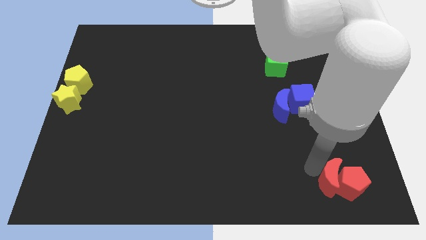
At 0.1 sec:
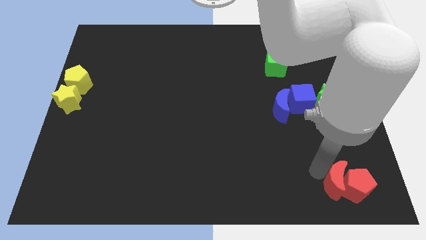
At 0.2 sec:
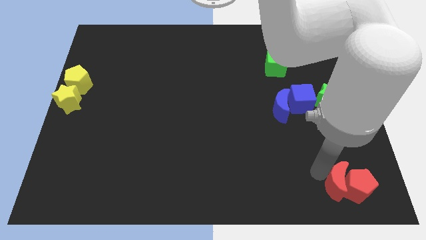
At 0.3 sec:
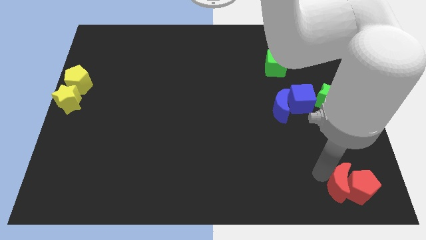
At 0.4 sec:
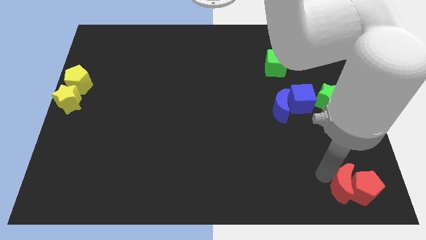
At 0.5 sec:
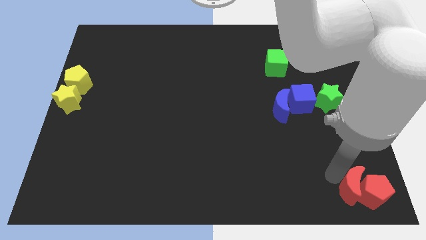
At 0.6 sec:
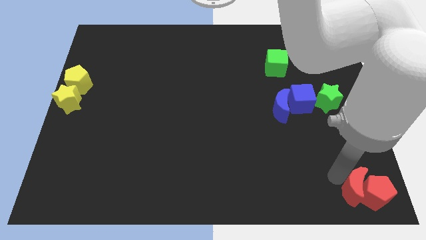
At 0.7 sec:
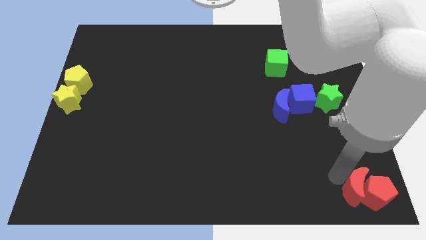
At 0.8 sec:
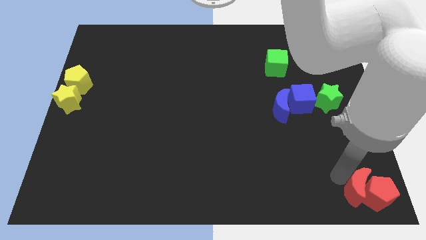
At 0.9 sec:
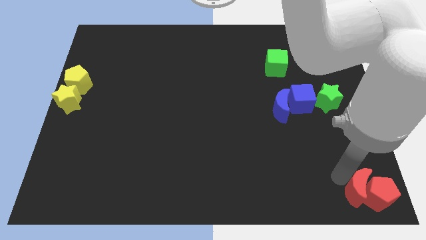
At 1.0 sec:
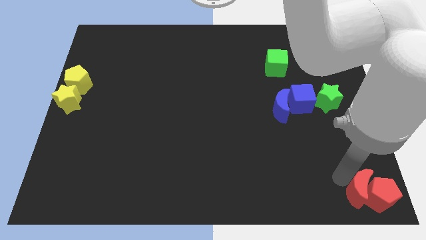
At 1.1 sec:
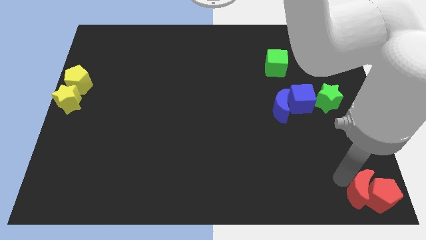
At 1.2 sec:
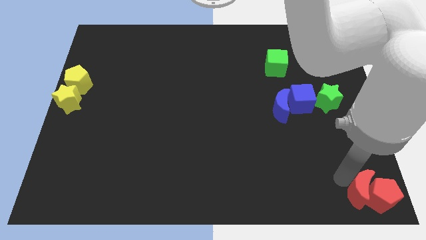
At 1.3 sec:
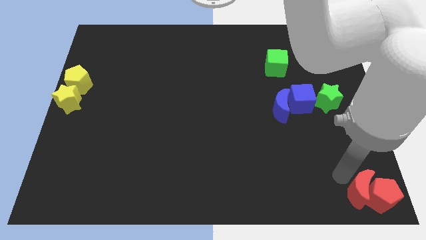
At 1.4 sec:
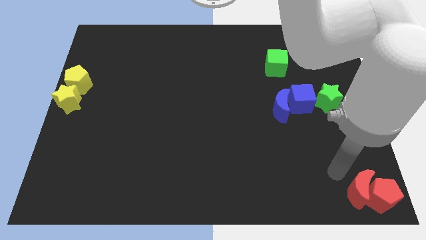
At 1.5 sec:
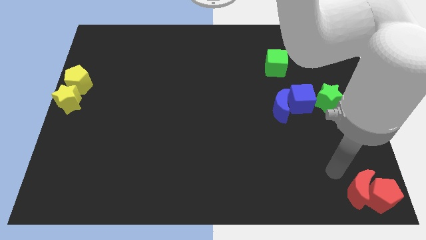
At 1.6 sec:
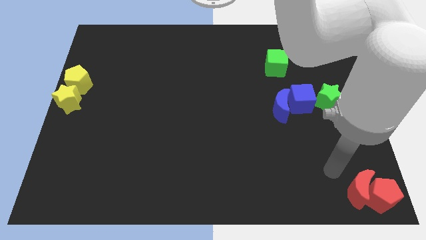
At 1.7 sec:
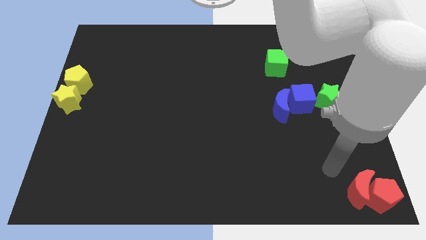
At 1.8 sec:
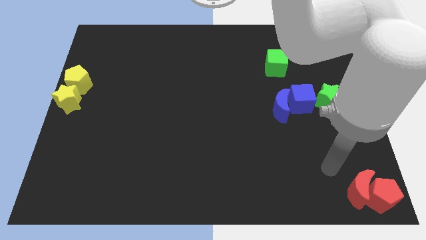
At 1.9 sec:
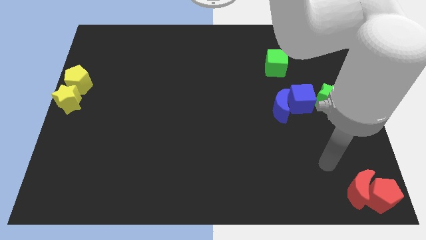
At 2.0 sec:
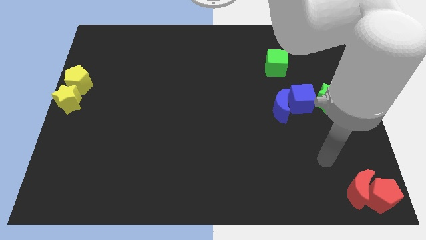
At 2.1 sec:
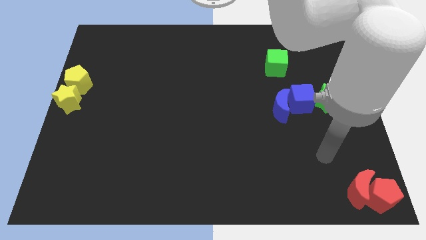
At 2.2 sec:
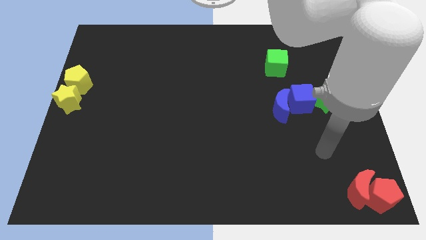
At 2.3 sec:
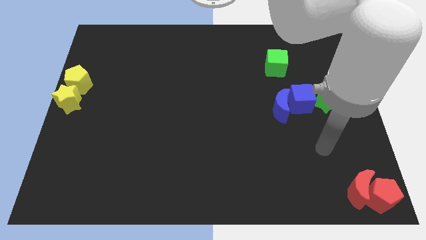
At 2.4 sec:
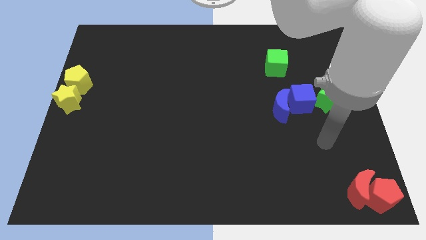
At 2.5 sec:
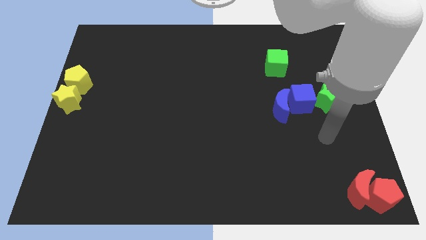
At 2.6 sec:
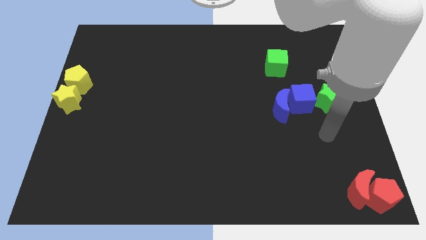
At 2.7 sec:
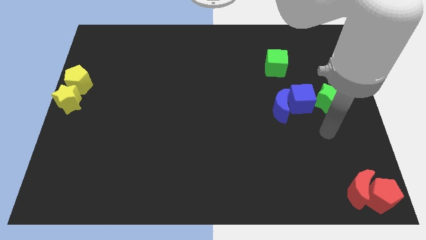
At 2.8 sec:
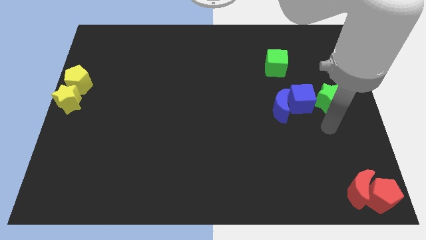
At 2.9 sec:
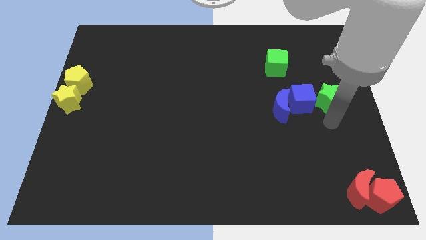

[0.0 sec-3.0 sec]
place the group of red blocks at the bottom right corner of the board

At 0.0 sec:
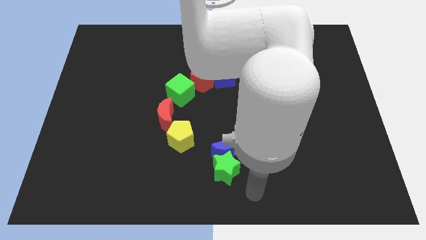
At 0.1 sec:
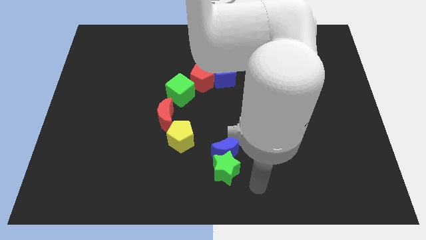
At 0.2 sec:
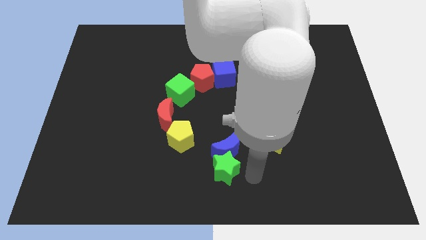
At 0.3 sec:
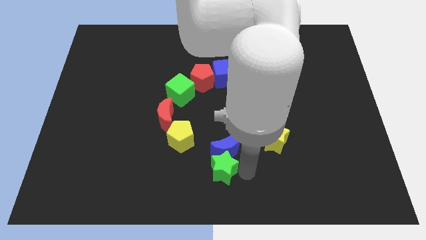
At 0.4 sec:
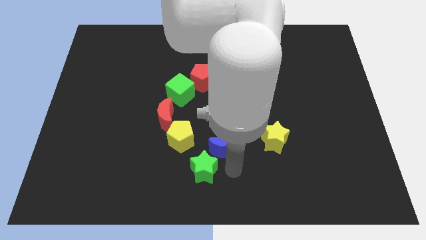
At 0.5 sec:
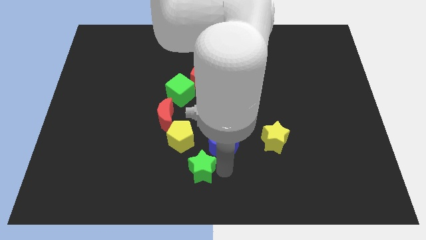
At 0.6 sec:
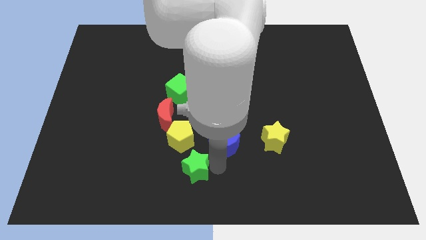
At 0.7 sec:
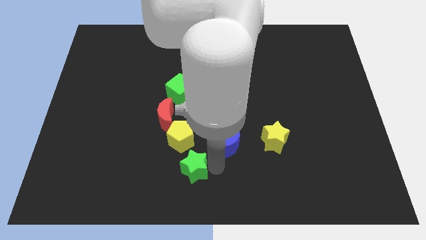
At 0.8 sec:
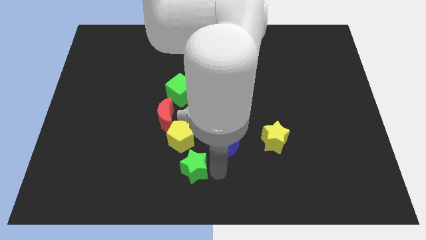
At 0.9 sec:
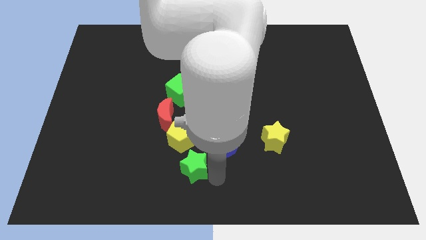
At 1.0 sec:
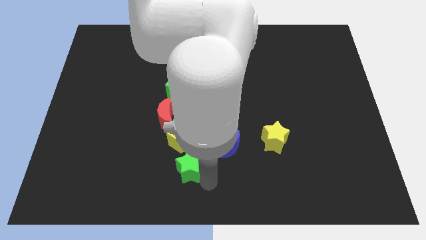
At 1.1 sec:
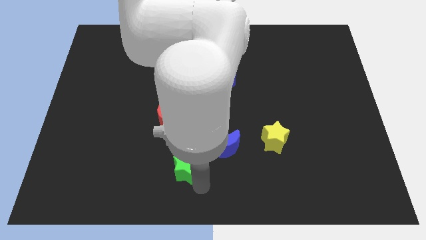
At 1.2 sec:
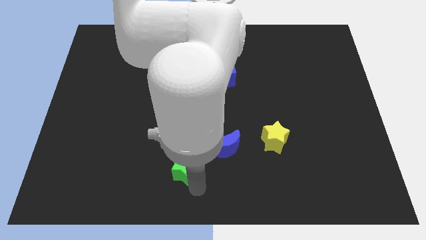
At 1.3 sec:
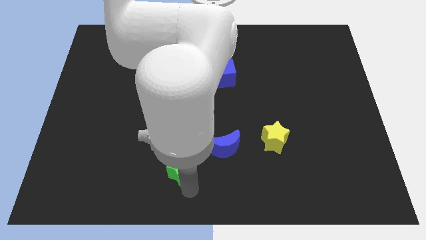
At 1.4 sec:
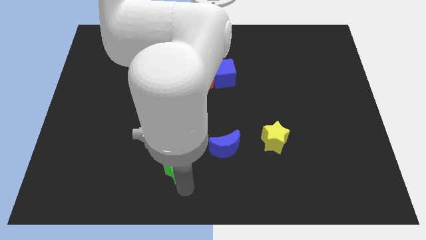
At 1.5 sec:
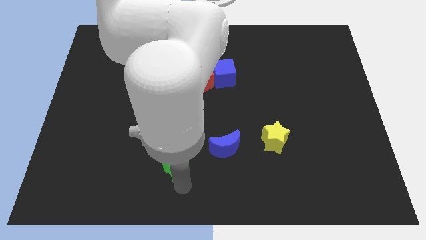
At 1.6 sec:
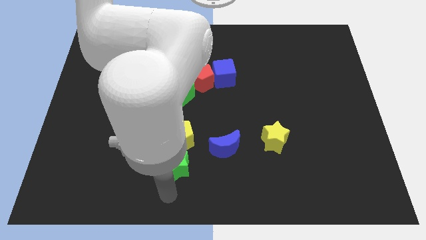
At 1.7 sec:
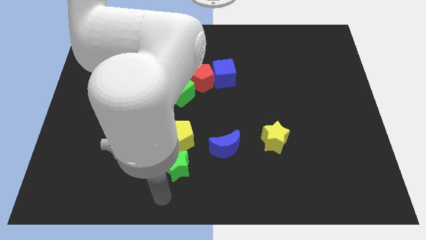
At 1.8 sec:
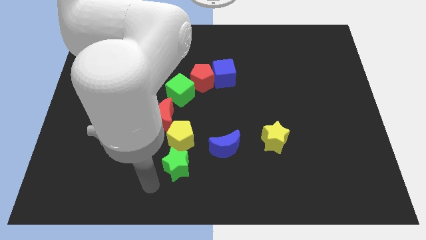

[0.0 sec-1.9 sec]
push the green star into the yellow pentagon

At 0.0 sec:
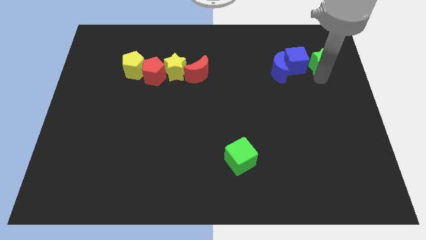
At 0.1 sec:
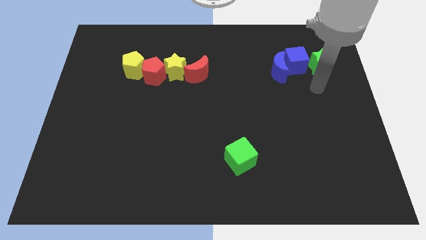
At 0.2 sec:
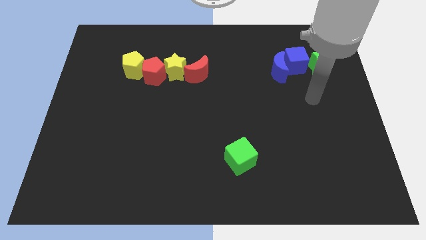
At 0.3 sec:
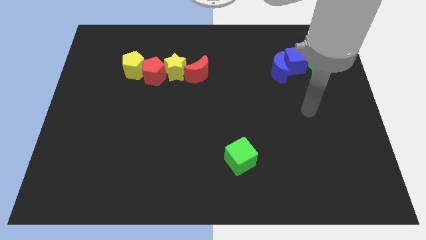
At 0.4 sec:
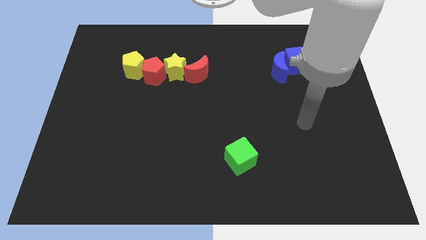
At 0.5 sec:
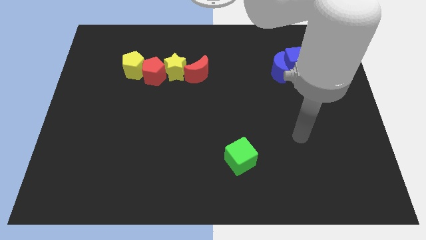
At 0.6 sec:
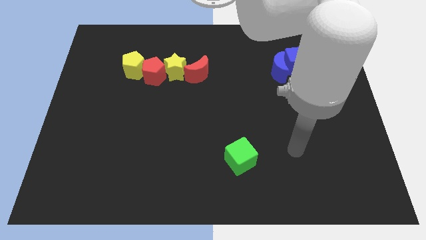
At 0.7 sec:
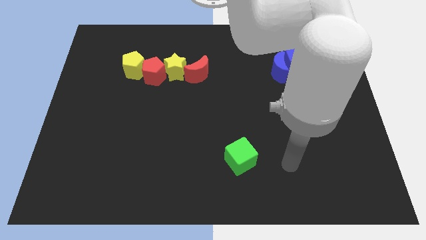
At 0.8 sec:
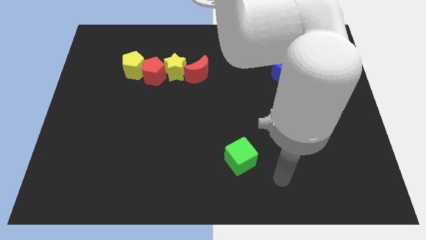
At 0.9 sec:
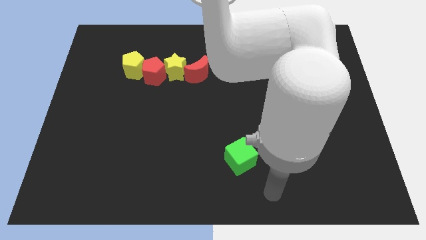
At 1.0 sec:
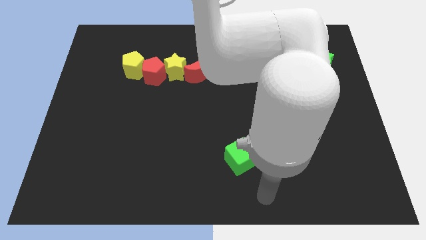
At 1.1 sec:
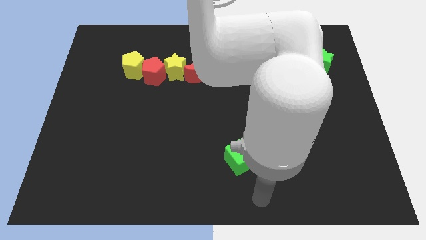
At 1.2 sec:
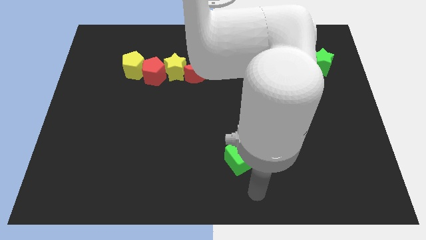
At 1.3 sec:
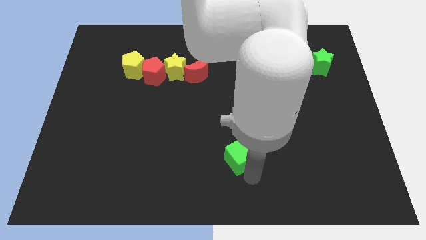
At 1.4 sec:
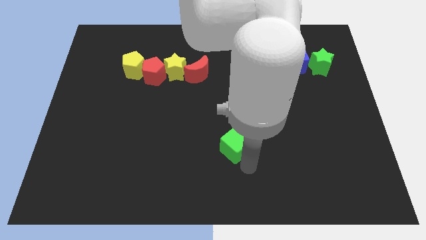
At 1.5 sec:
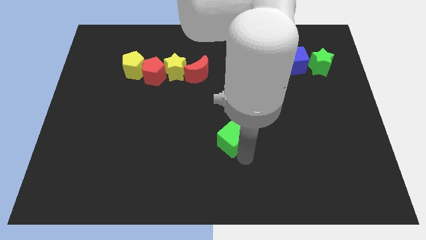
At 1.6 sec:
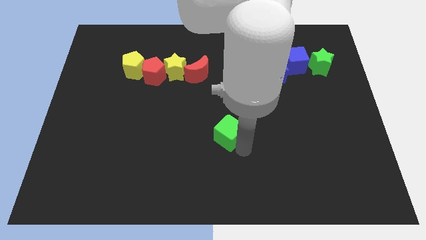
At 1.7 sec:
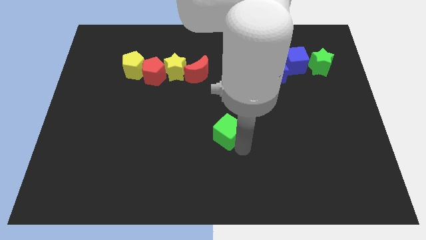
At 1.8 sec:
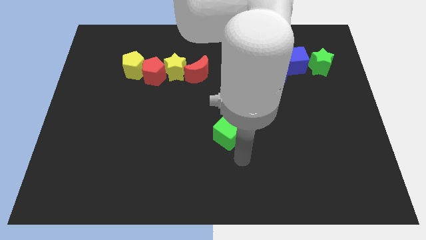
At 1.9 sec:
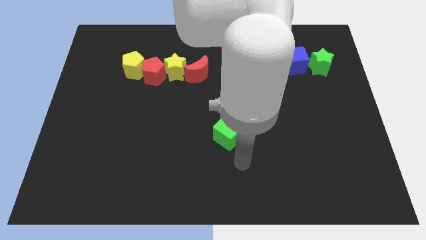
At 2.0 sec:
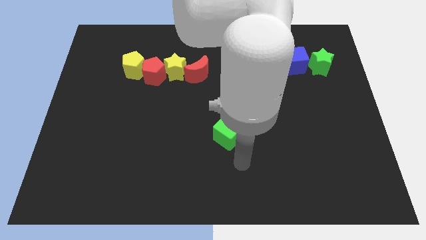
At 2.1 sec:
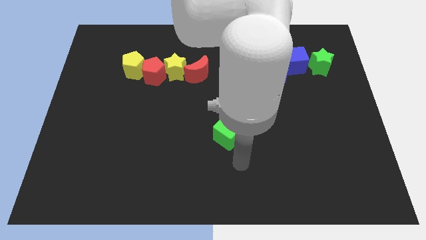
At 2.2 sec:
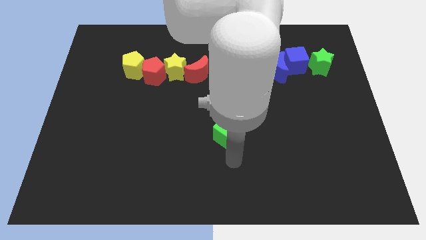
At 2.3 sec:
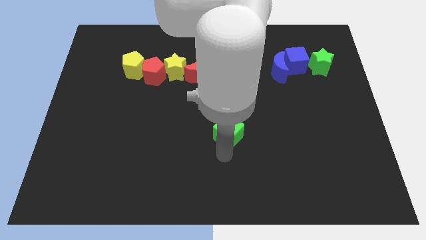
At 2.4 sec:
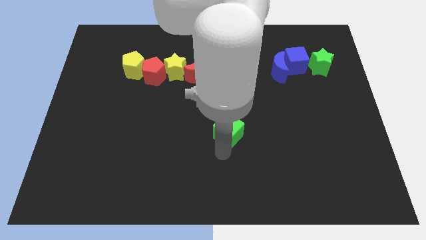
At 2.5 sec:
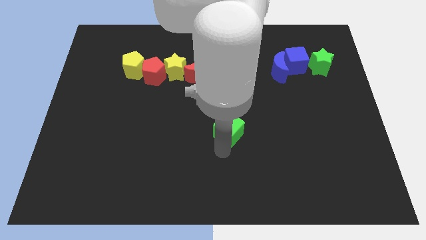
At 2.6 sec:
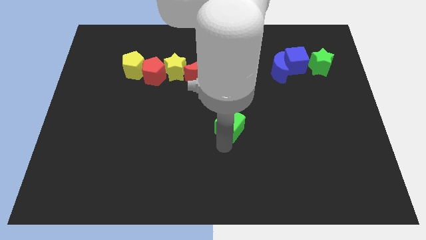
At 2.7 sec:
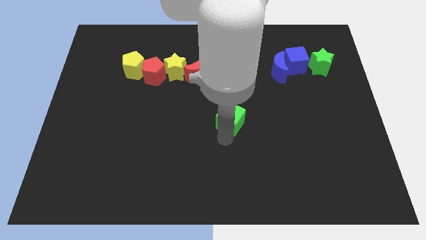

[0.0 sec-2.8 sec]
move the arm away from the green star

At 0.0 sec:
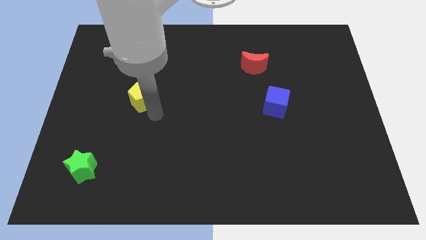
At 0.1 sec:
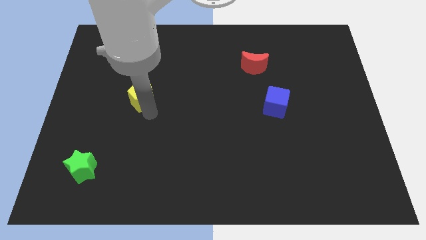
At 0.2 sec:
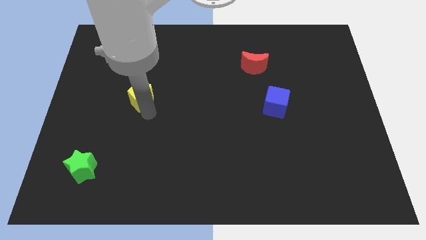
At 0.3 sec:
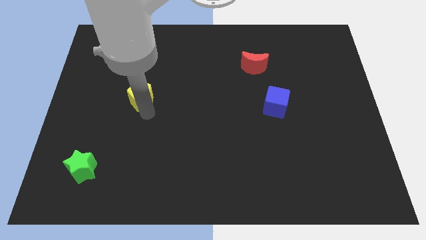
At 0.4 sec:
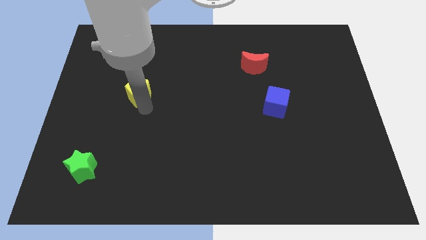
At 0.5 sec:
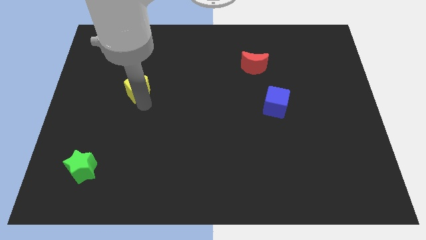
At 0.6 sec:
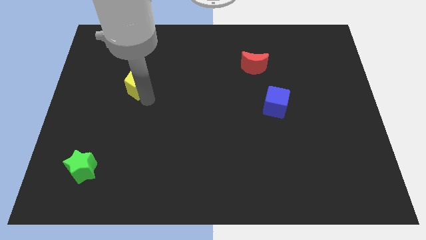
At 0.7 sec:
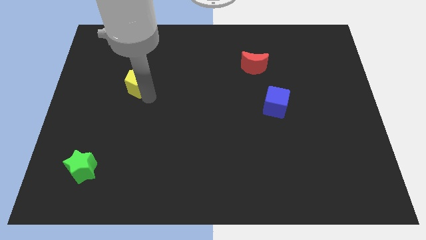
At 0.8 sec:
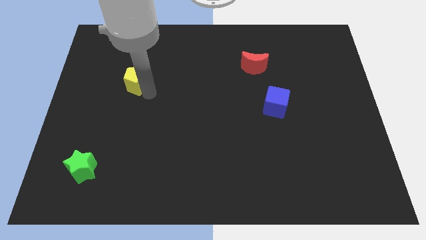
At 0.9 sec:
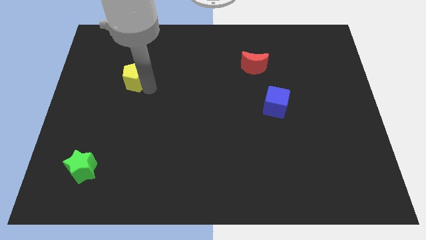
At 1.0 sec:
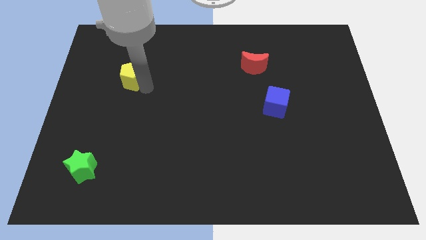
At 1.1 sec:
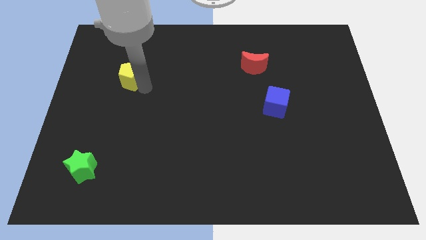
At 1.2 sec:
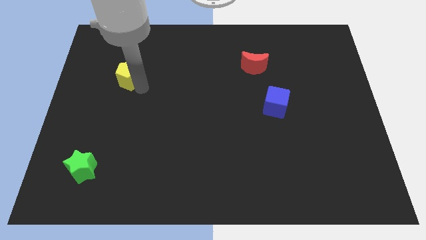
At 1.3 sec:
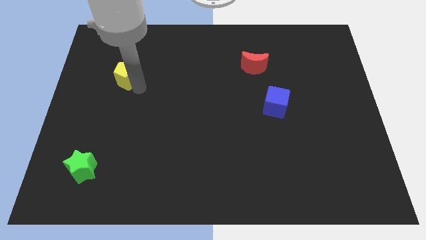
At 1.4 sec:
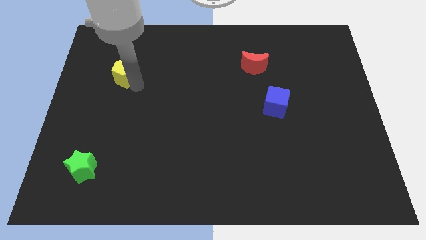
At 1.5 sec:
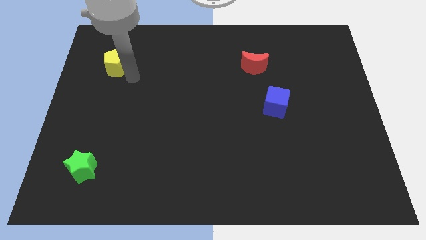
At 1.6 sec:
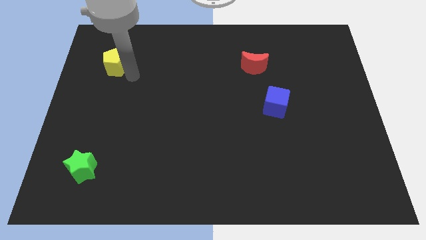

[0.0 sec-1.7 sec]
slide the yellow pentagon to the top left of the board
